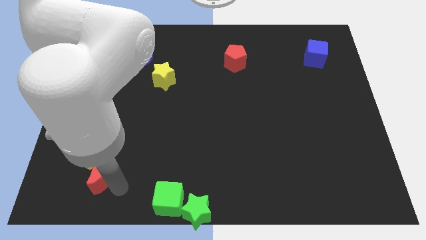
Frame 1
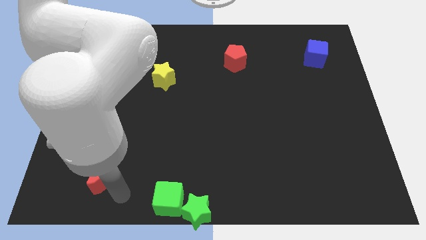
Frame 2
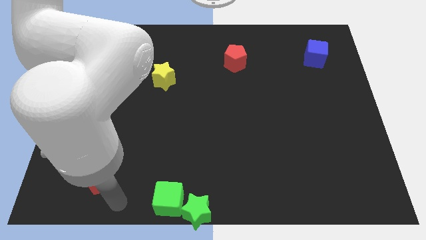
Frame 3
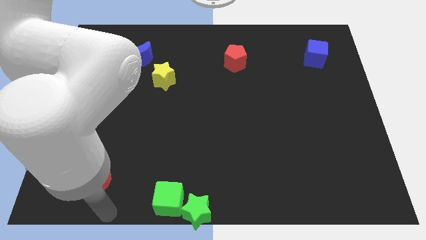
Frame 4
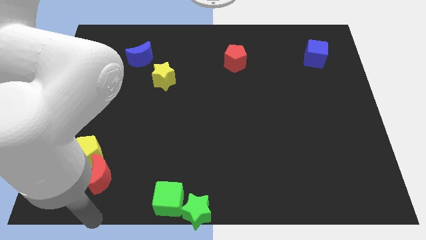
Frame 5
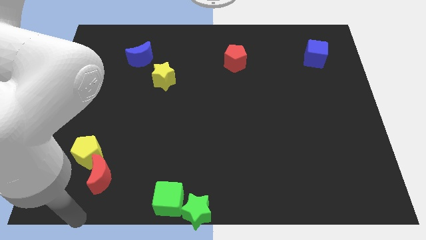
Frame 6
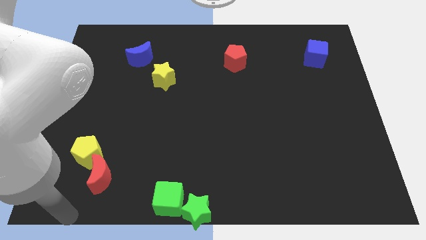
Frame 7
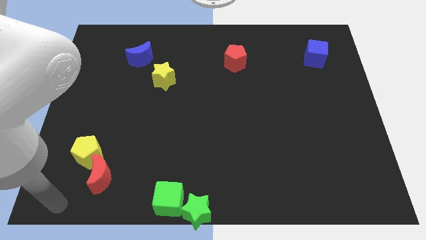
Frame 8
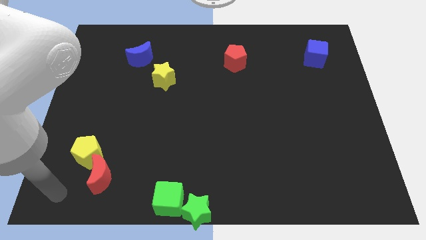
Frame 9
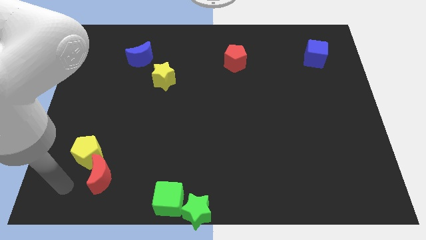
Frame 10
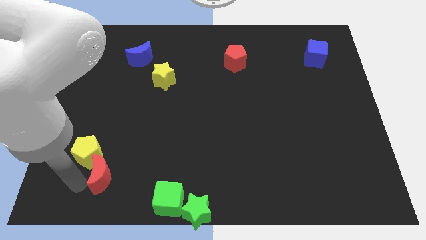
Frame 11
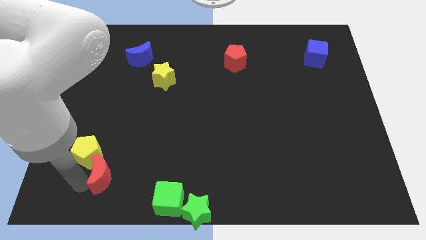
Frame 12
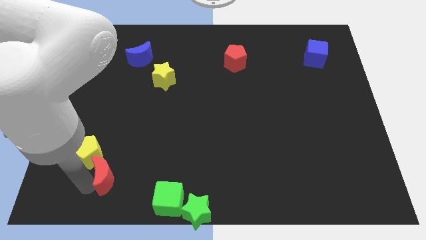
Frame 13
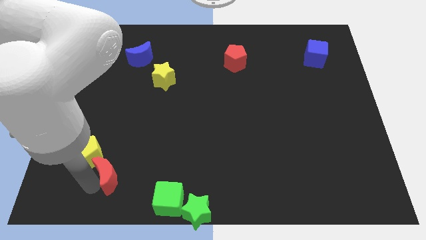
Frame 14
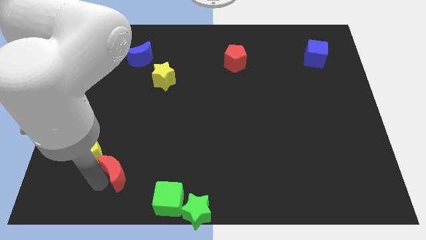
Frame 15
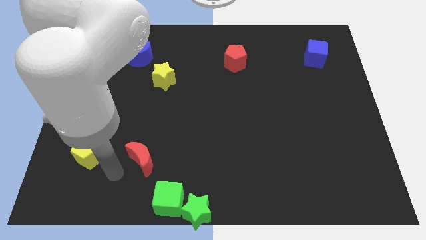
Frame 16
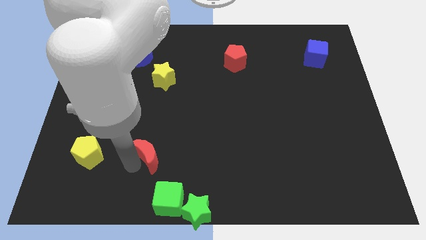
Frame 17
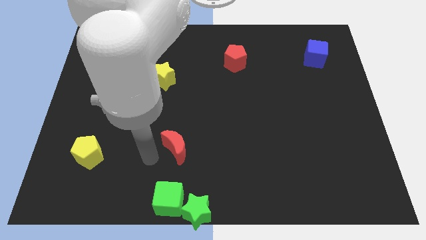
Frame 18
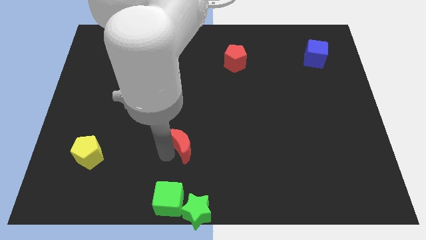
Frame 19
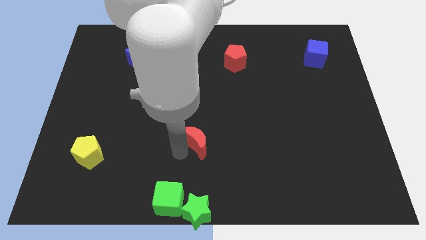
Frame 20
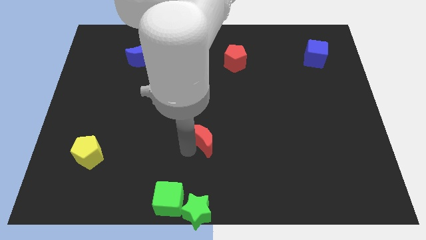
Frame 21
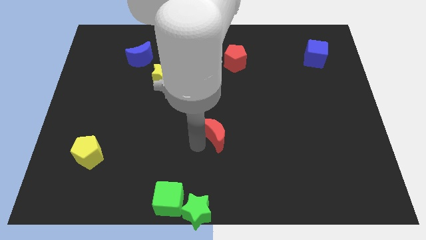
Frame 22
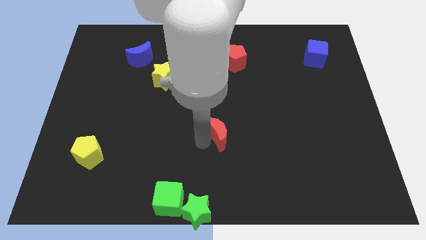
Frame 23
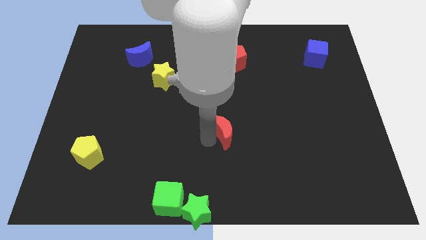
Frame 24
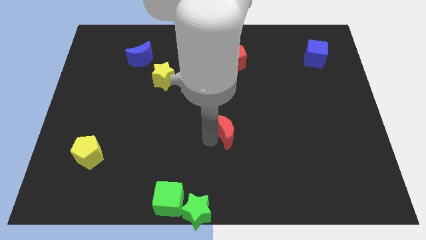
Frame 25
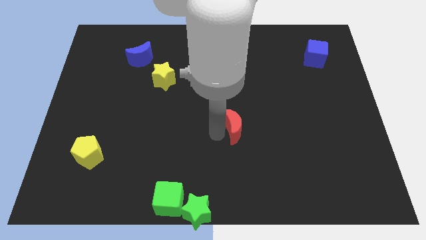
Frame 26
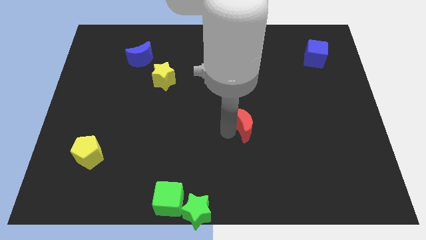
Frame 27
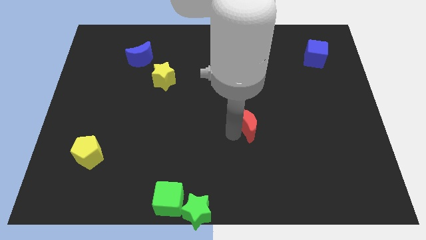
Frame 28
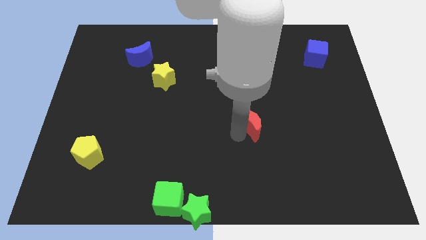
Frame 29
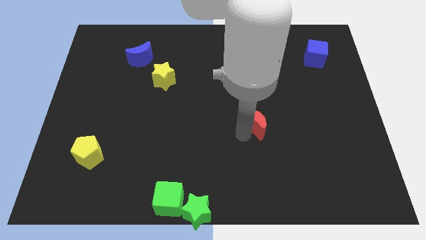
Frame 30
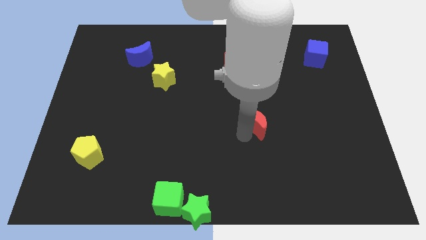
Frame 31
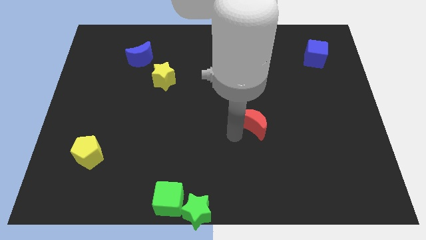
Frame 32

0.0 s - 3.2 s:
separate the red moon from the yellow pentagon

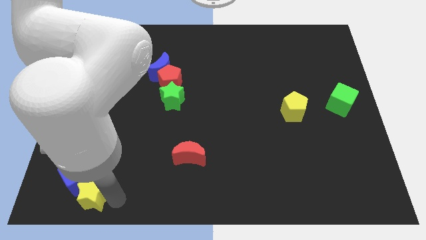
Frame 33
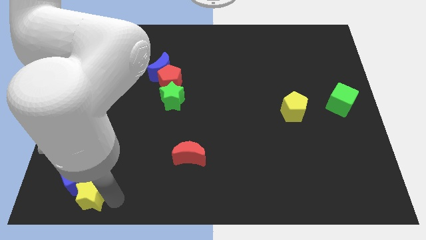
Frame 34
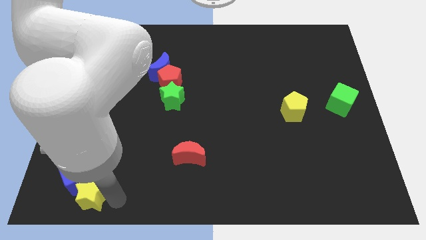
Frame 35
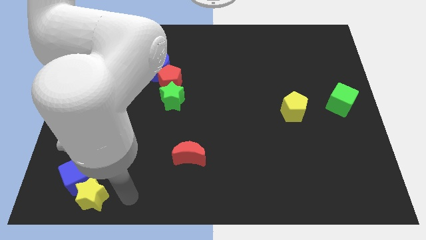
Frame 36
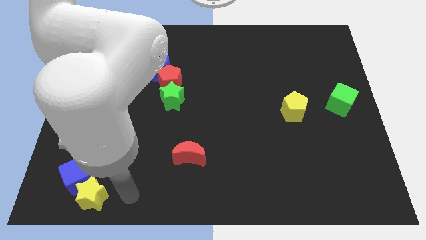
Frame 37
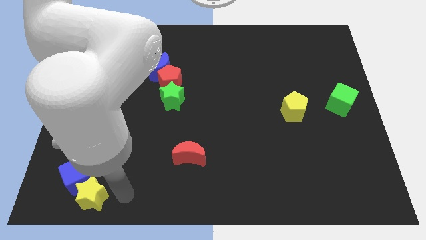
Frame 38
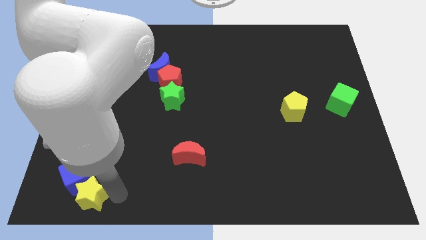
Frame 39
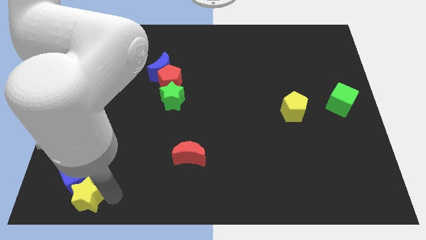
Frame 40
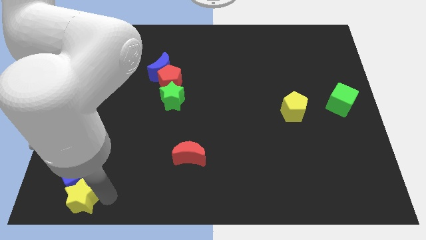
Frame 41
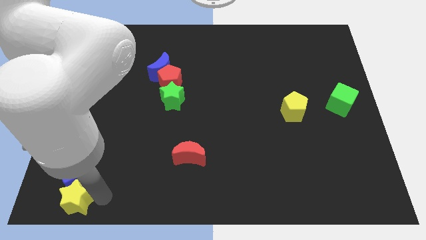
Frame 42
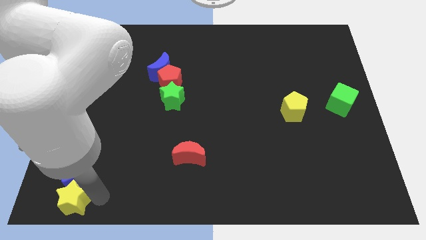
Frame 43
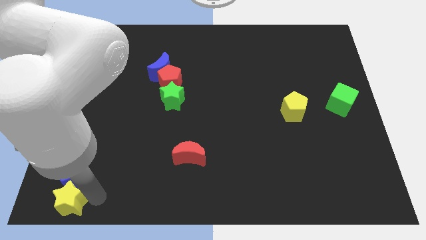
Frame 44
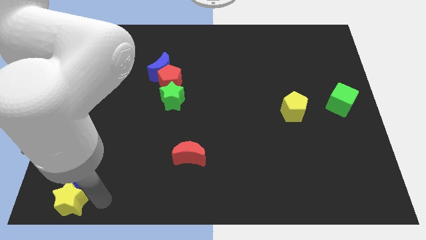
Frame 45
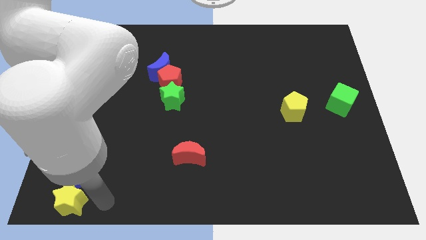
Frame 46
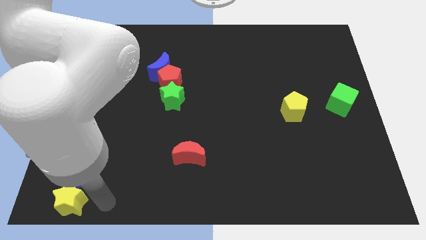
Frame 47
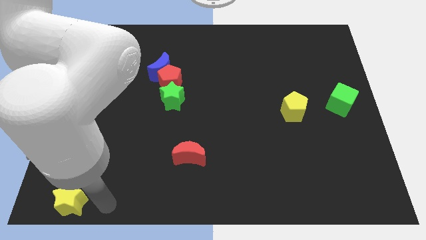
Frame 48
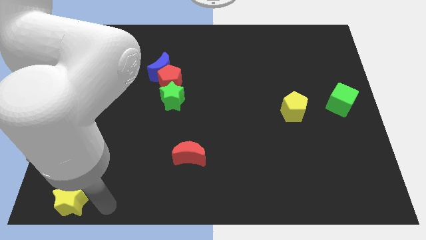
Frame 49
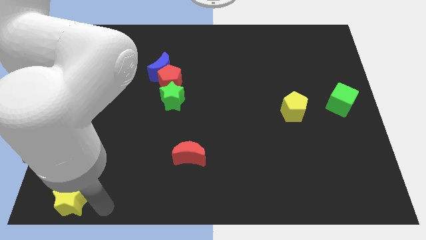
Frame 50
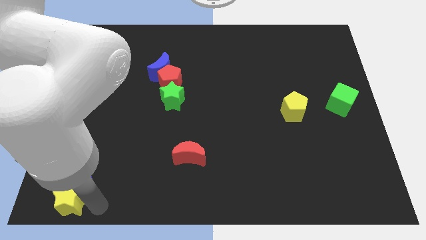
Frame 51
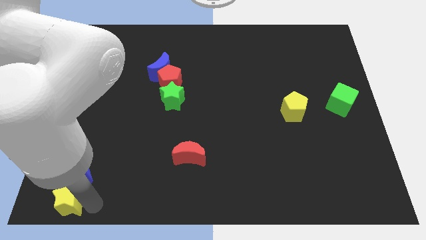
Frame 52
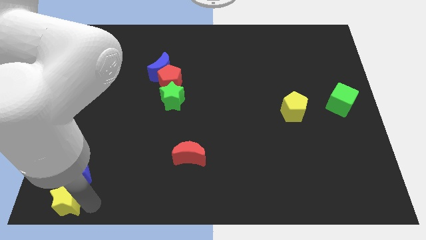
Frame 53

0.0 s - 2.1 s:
move yellow star towards bottom left

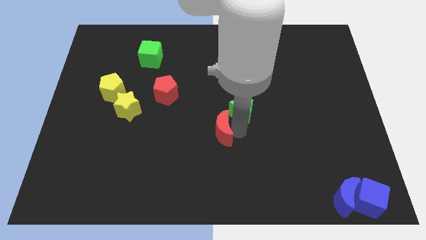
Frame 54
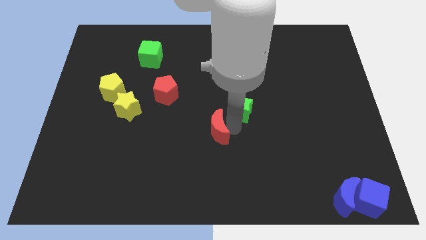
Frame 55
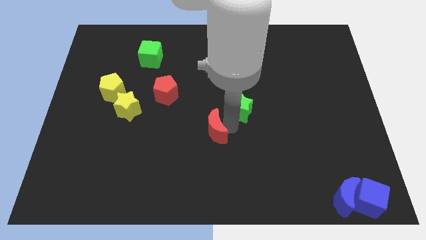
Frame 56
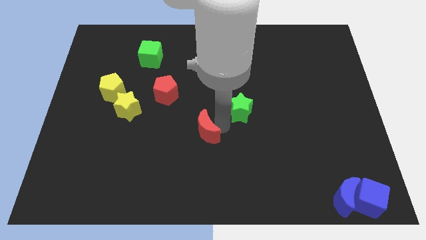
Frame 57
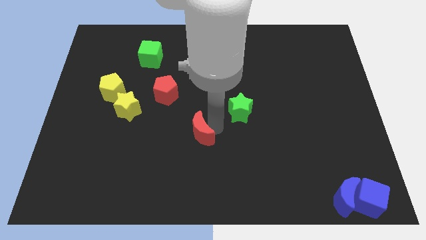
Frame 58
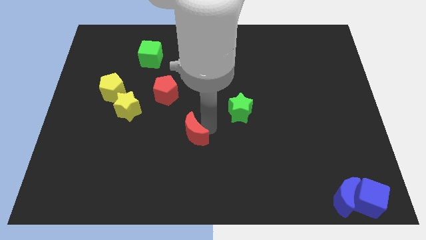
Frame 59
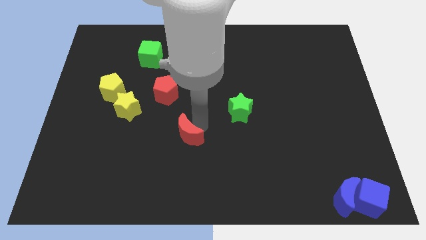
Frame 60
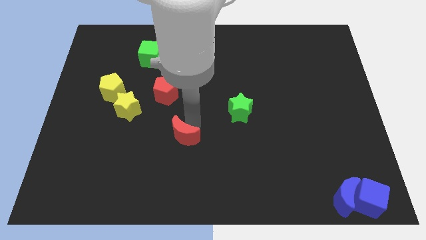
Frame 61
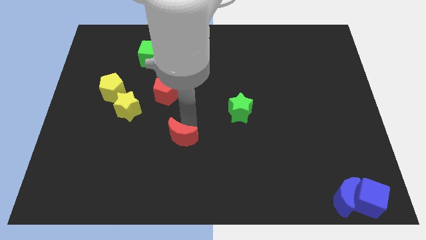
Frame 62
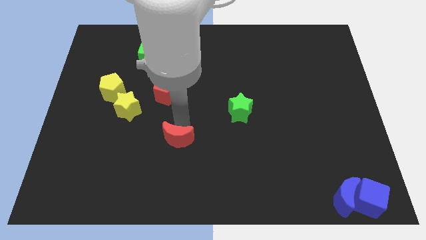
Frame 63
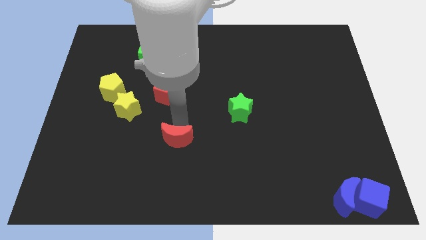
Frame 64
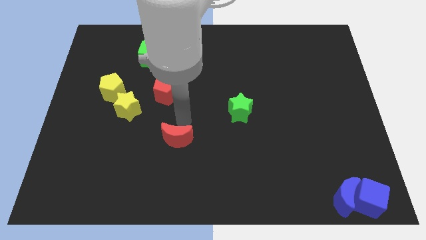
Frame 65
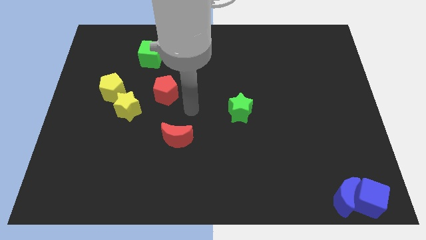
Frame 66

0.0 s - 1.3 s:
move red crescent from green star

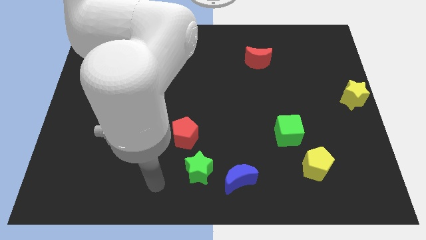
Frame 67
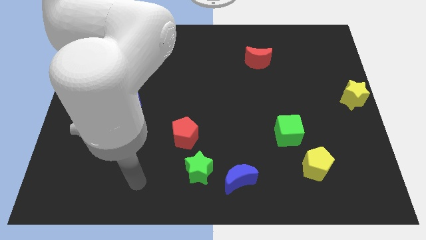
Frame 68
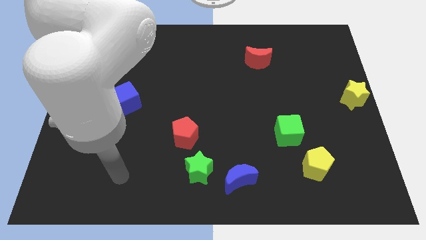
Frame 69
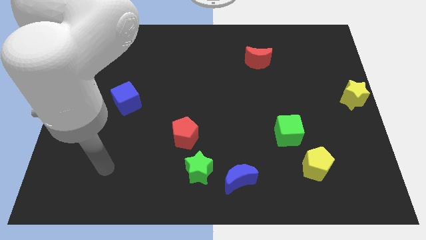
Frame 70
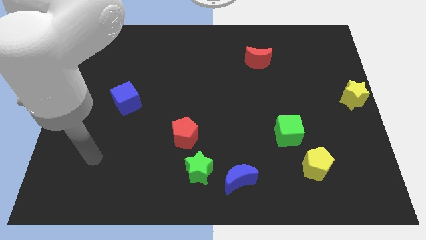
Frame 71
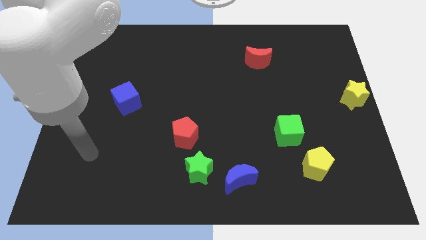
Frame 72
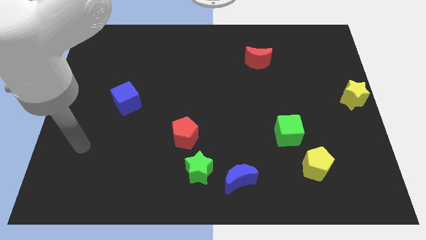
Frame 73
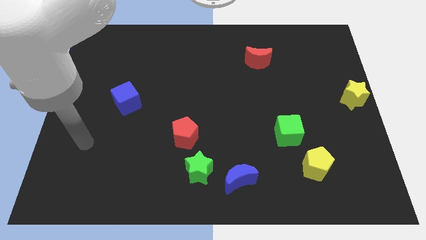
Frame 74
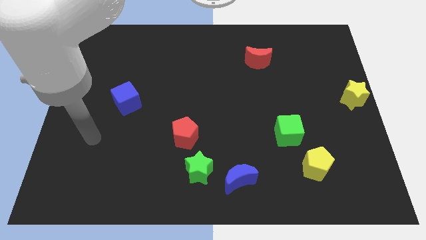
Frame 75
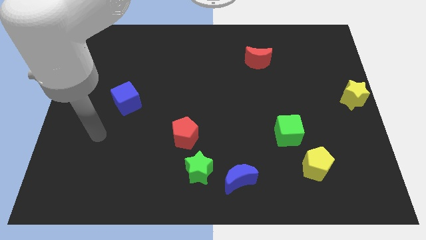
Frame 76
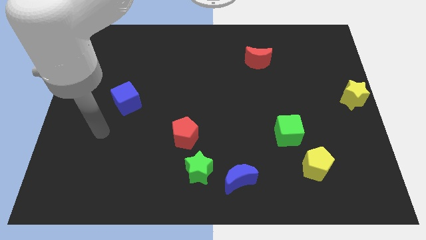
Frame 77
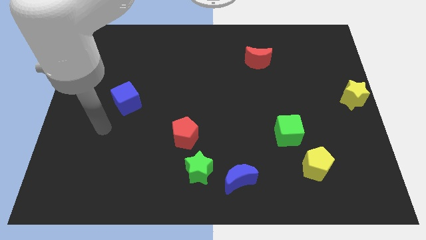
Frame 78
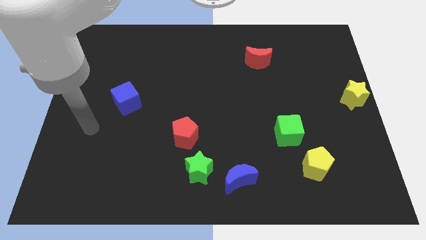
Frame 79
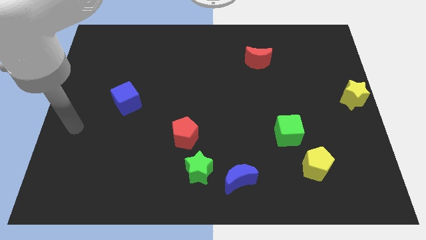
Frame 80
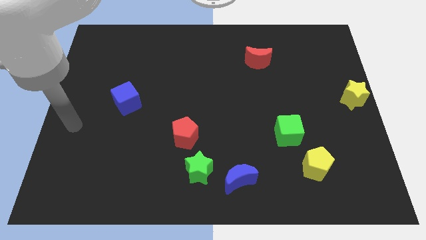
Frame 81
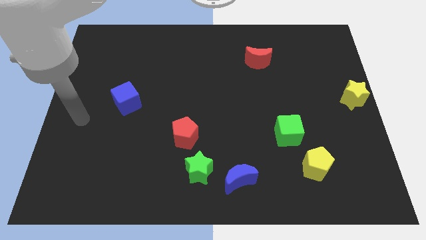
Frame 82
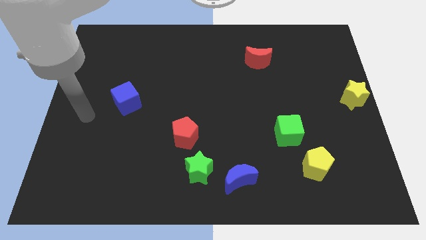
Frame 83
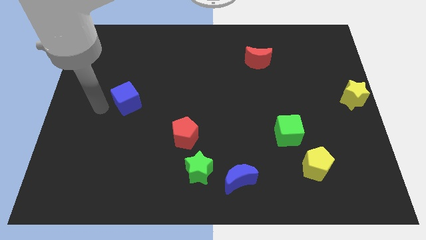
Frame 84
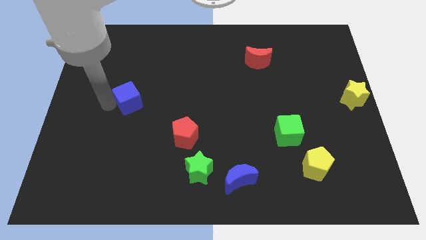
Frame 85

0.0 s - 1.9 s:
place your arm to the left of the blue cube

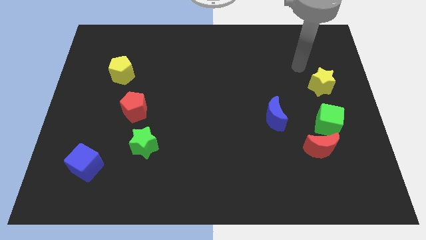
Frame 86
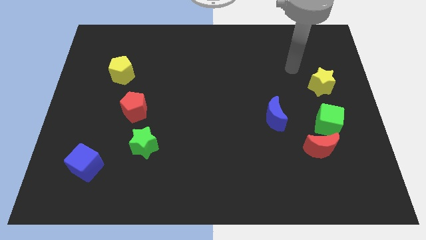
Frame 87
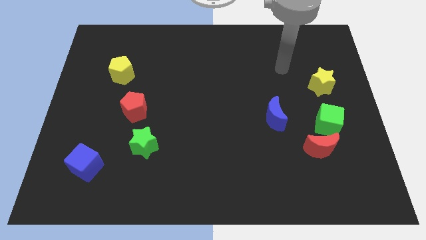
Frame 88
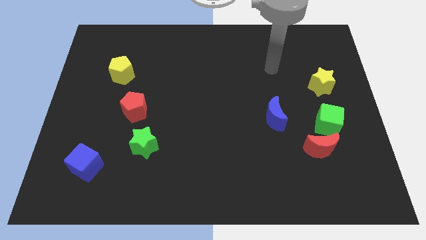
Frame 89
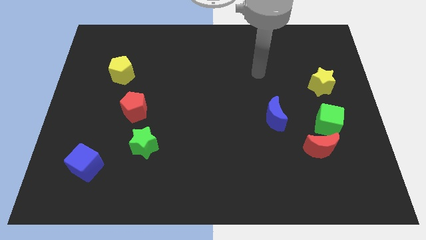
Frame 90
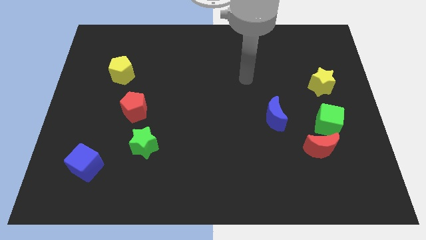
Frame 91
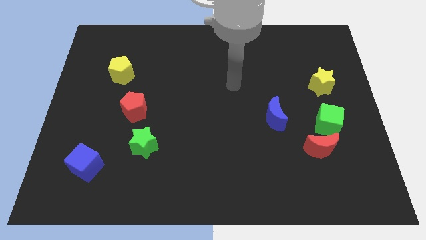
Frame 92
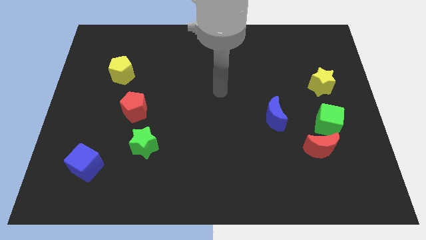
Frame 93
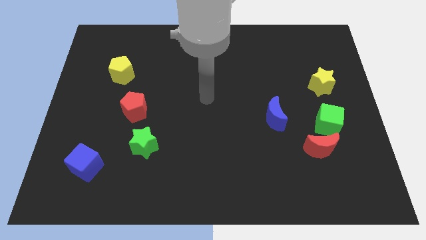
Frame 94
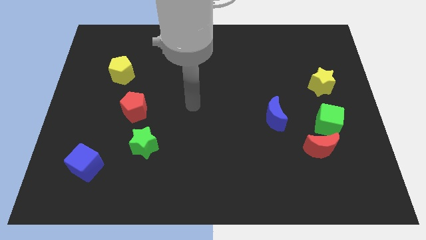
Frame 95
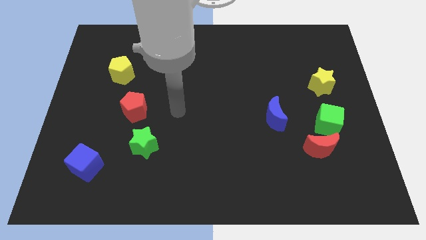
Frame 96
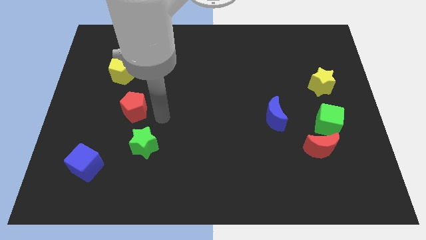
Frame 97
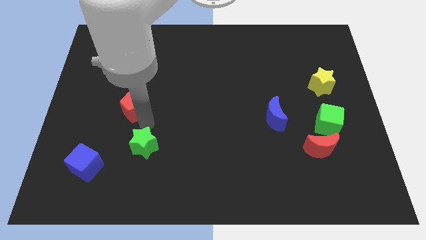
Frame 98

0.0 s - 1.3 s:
go and point your hand at the top right of the green star
